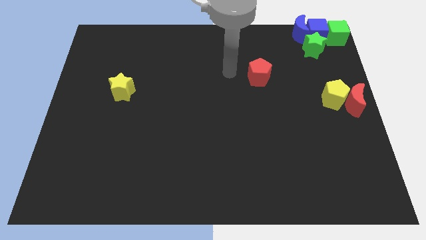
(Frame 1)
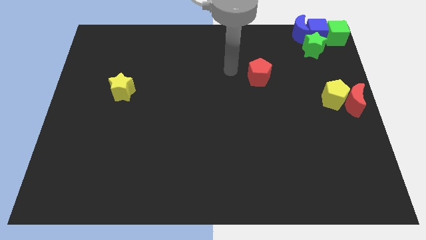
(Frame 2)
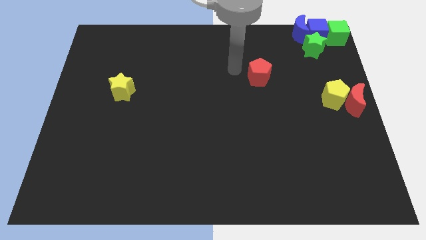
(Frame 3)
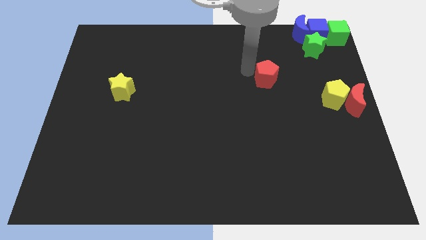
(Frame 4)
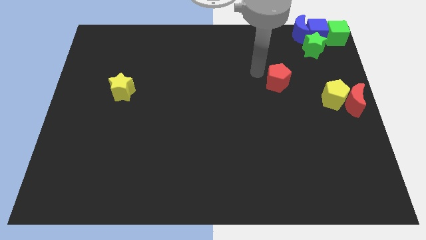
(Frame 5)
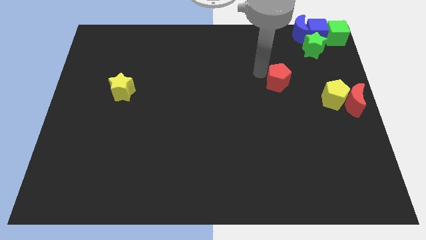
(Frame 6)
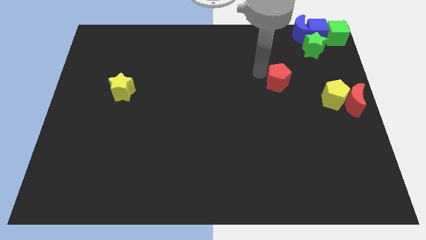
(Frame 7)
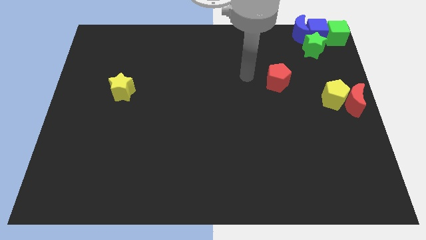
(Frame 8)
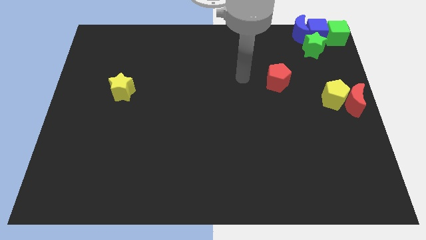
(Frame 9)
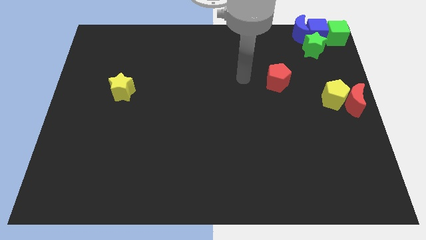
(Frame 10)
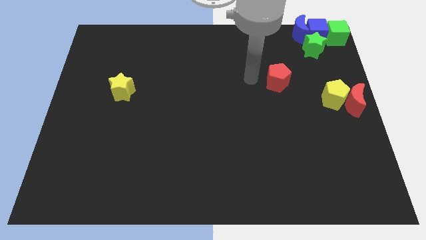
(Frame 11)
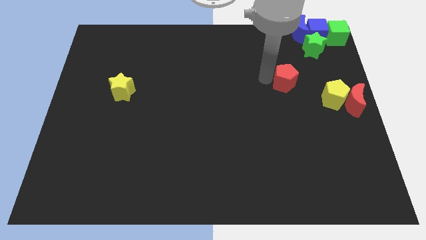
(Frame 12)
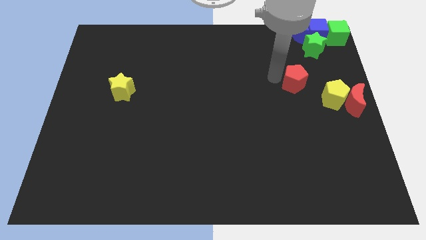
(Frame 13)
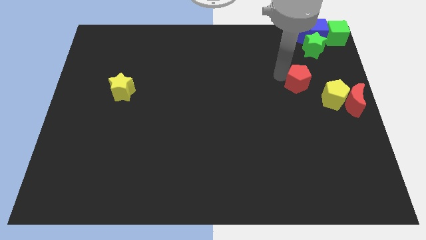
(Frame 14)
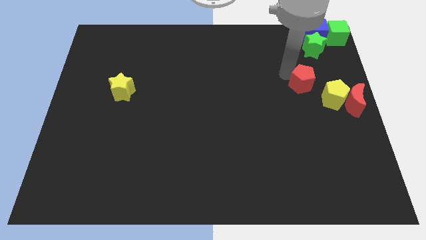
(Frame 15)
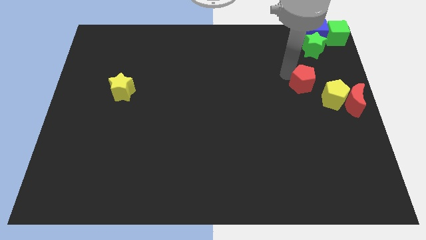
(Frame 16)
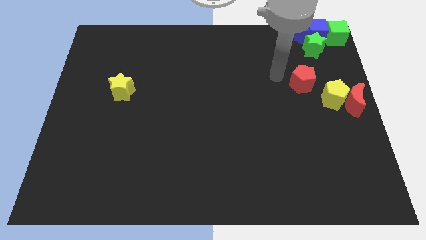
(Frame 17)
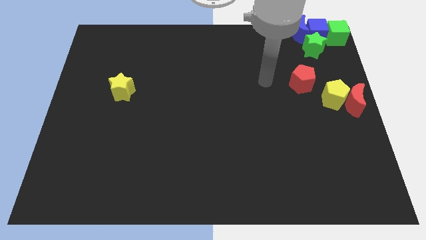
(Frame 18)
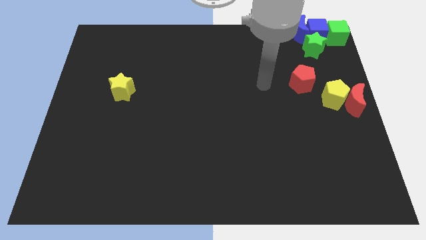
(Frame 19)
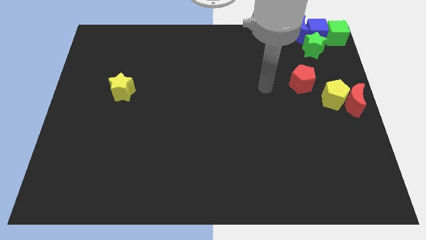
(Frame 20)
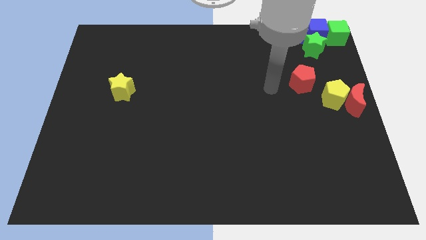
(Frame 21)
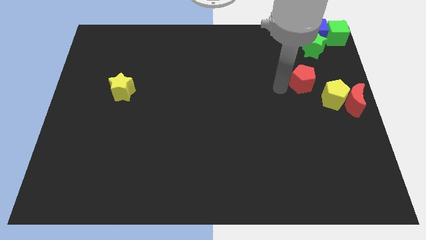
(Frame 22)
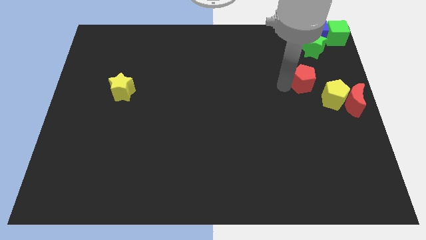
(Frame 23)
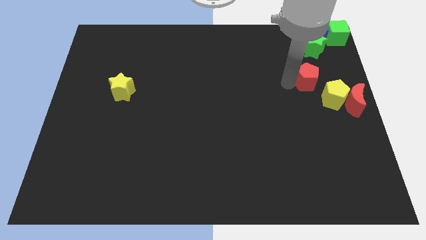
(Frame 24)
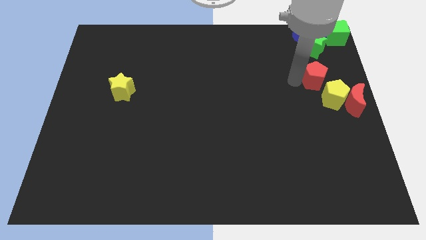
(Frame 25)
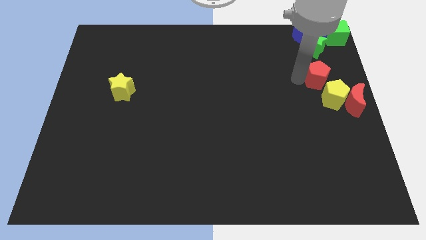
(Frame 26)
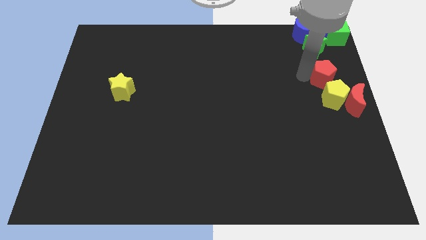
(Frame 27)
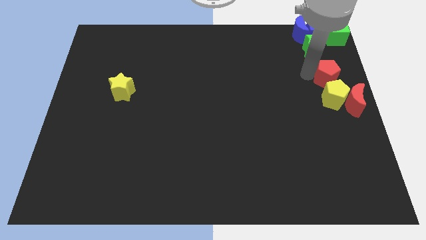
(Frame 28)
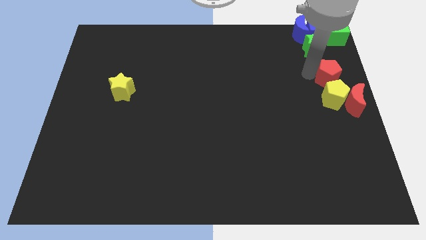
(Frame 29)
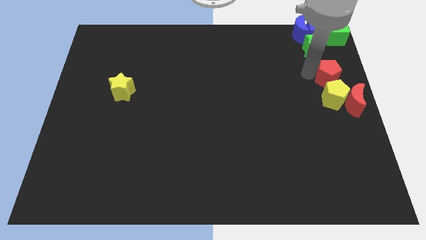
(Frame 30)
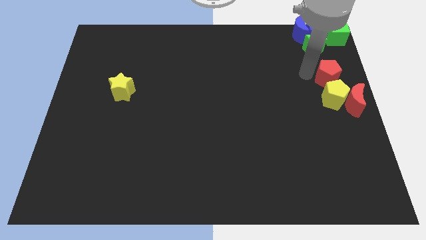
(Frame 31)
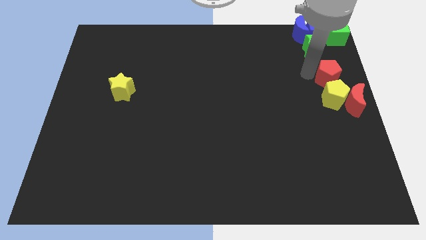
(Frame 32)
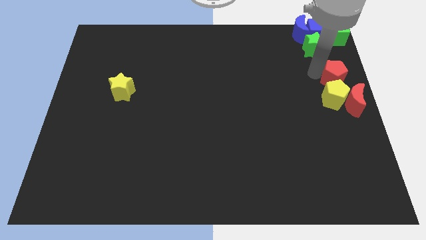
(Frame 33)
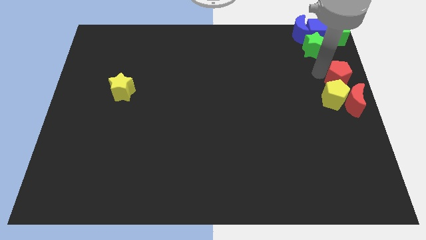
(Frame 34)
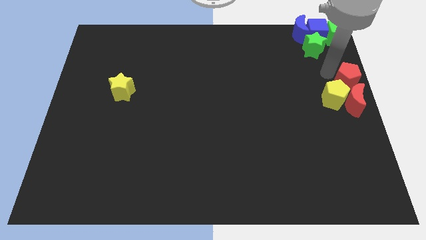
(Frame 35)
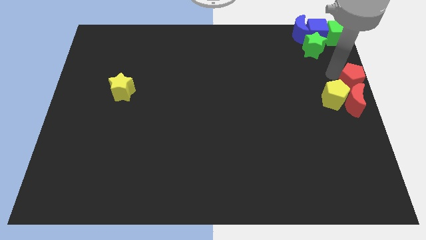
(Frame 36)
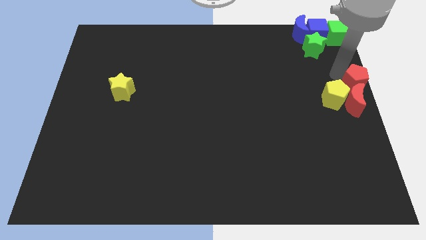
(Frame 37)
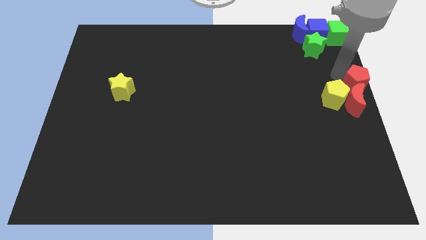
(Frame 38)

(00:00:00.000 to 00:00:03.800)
place the red pentagon vertically below the green cube

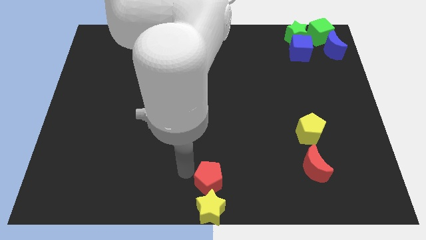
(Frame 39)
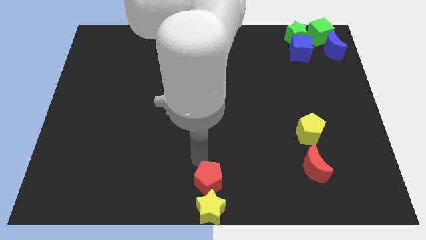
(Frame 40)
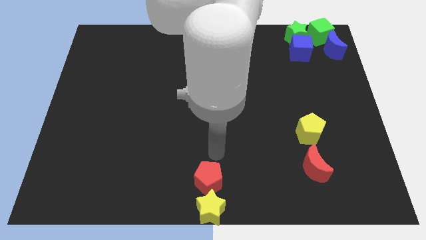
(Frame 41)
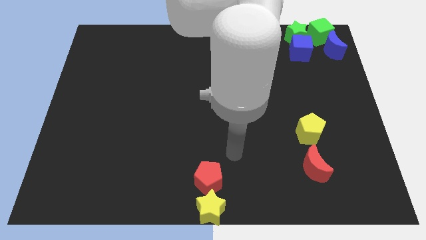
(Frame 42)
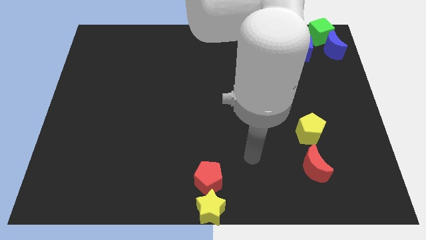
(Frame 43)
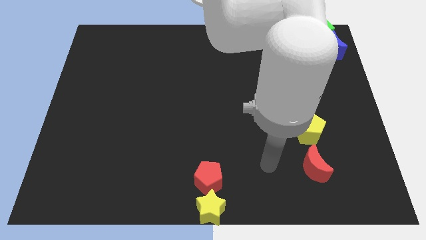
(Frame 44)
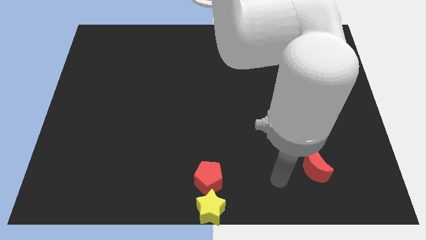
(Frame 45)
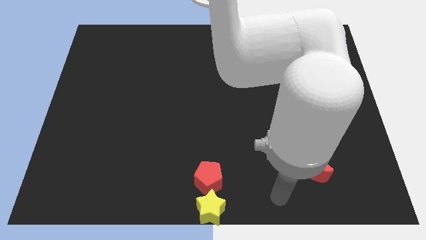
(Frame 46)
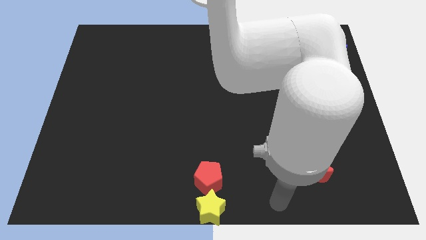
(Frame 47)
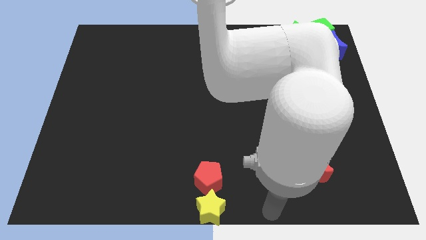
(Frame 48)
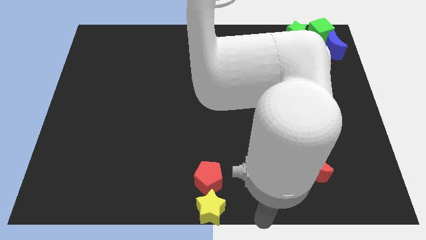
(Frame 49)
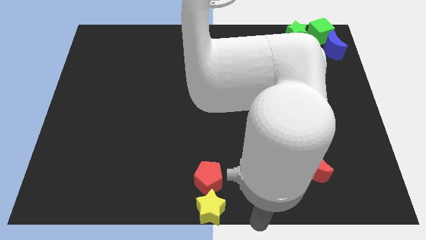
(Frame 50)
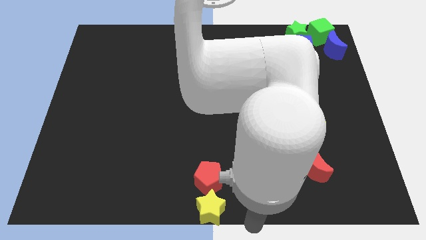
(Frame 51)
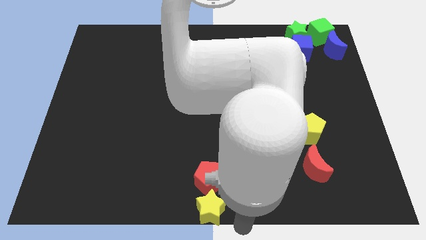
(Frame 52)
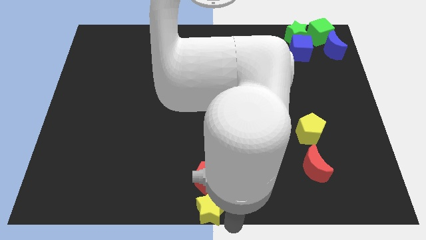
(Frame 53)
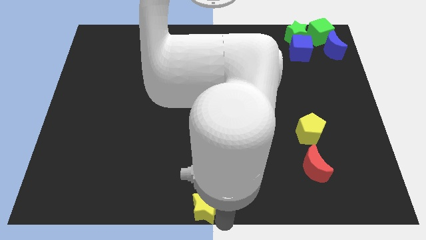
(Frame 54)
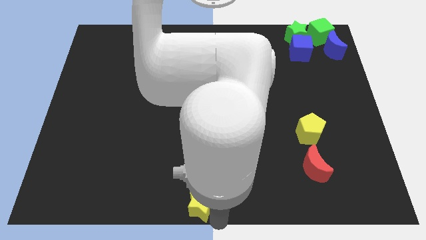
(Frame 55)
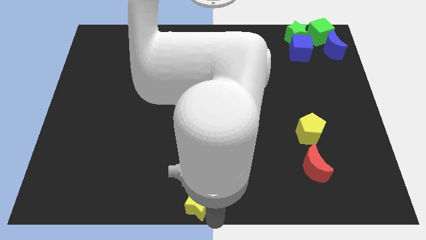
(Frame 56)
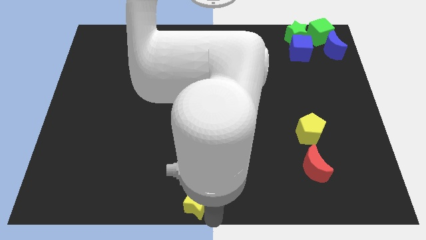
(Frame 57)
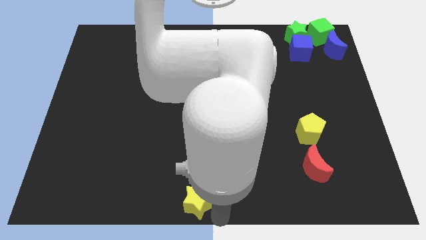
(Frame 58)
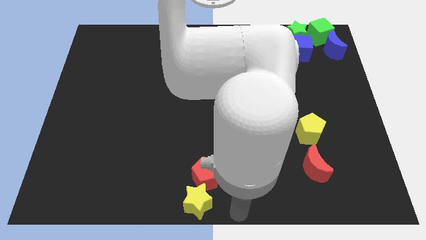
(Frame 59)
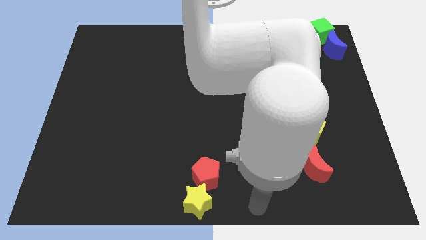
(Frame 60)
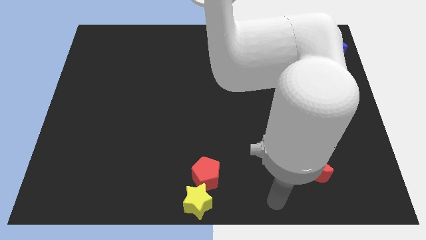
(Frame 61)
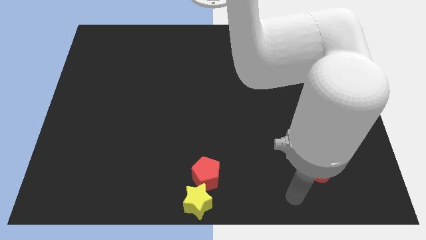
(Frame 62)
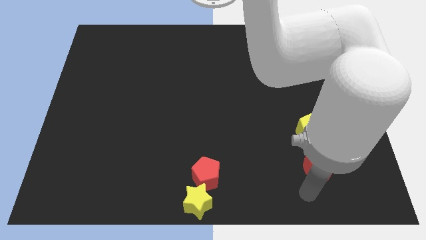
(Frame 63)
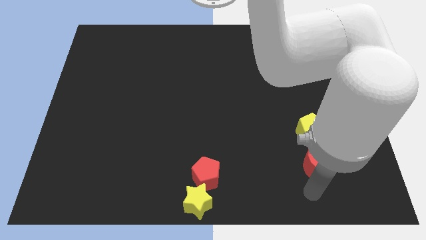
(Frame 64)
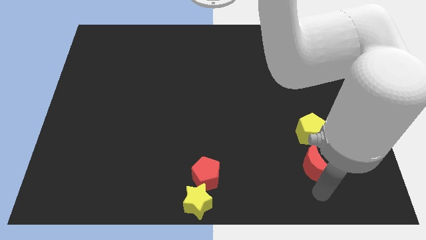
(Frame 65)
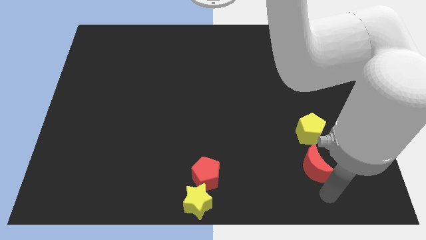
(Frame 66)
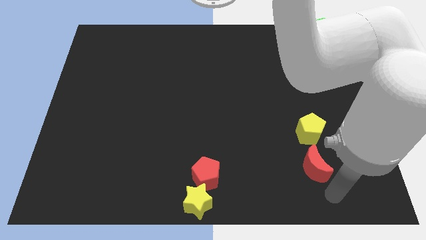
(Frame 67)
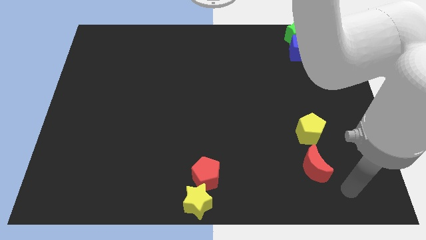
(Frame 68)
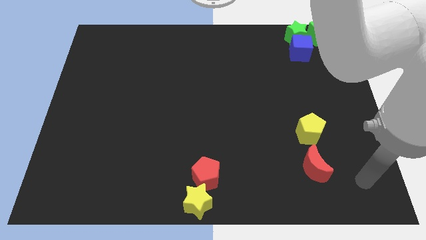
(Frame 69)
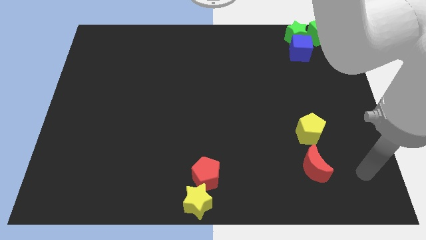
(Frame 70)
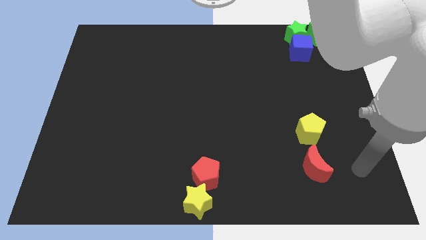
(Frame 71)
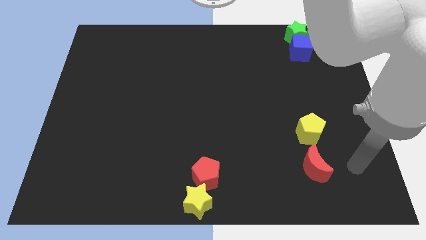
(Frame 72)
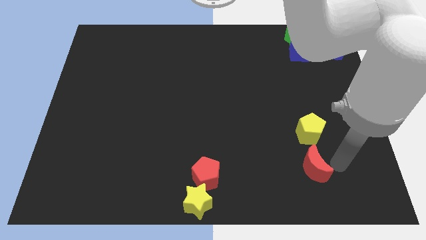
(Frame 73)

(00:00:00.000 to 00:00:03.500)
slightly push the yellow star to the left

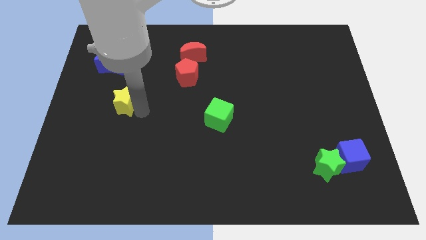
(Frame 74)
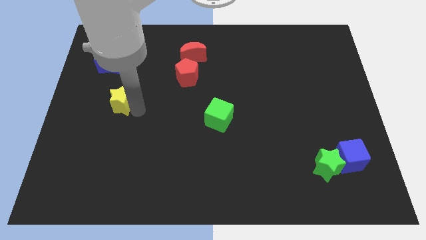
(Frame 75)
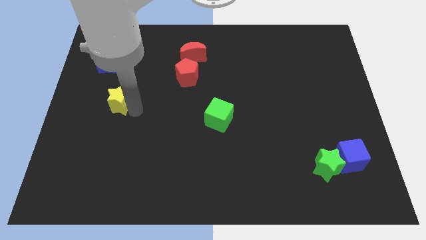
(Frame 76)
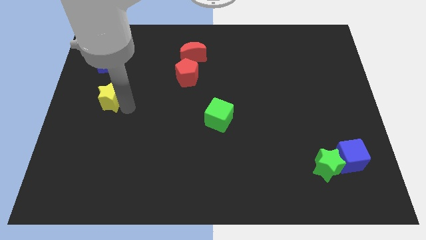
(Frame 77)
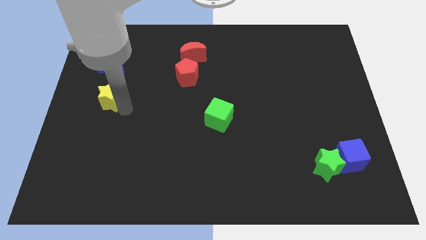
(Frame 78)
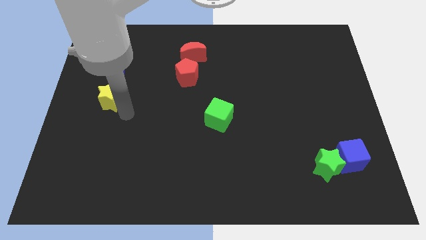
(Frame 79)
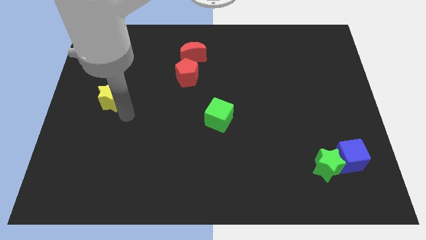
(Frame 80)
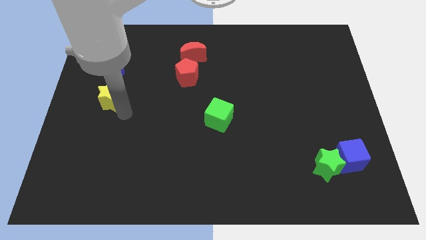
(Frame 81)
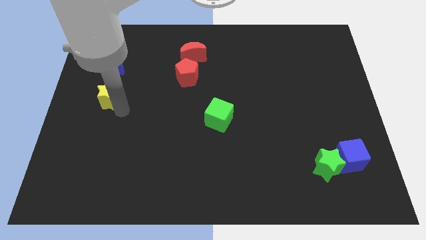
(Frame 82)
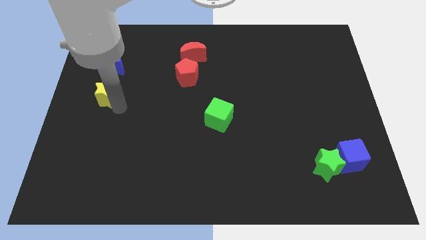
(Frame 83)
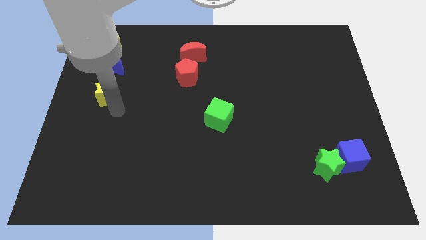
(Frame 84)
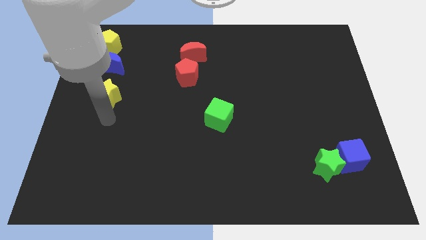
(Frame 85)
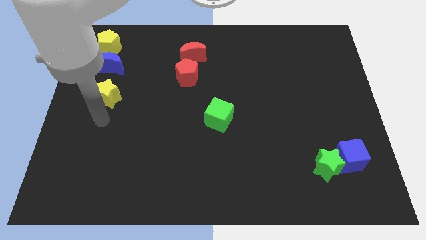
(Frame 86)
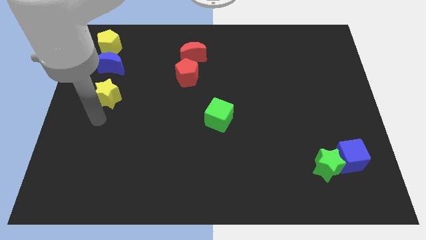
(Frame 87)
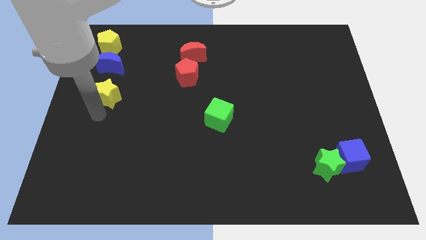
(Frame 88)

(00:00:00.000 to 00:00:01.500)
move the yellow star to the bottom side of the blue crescent
